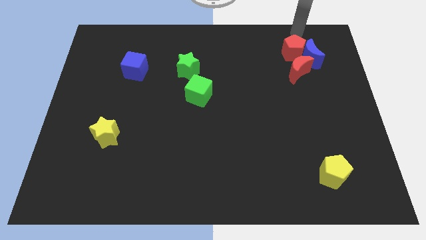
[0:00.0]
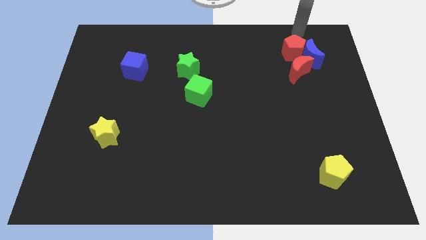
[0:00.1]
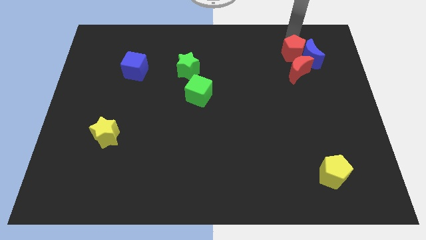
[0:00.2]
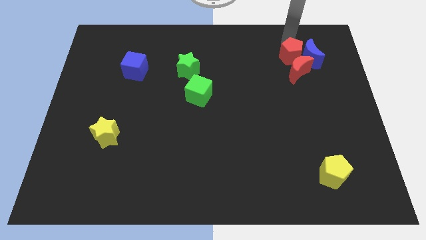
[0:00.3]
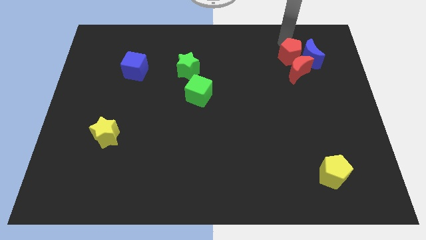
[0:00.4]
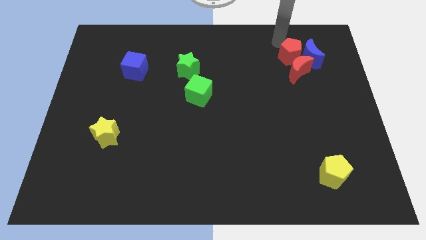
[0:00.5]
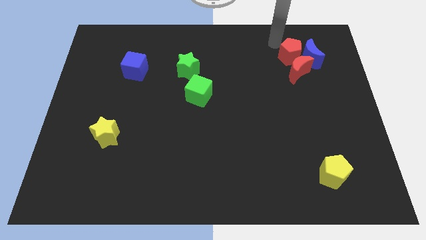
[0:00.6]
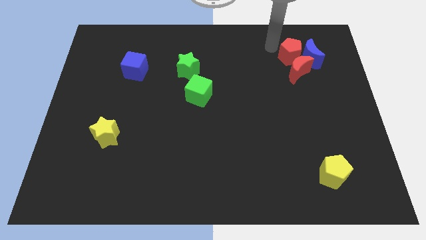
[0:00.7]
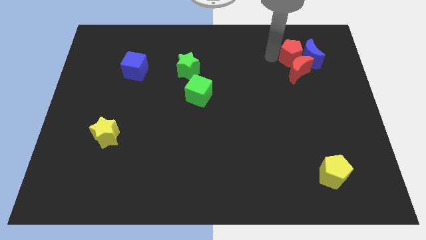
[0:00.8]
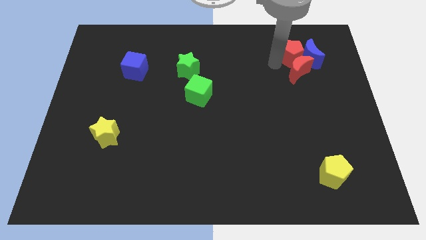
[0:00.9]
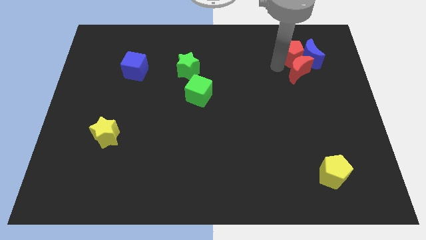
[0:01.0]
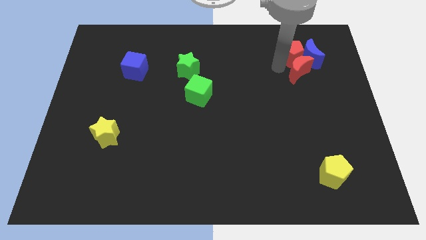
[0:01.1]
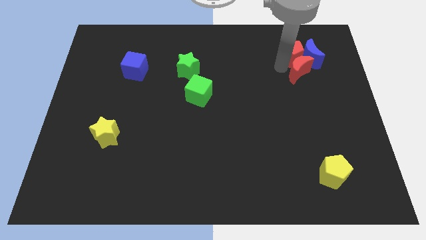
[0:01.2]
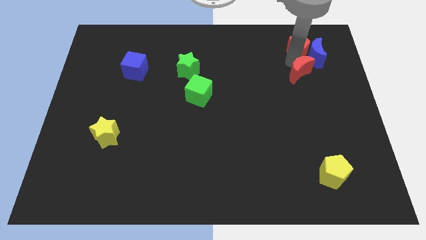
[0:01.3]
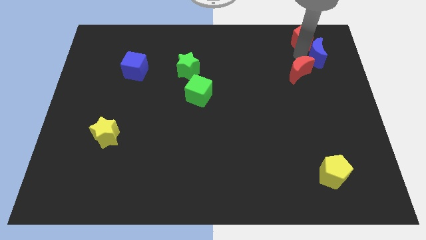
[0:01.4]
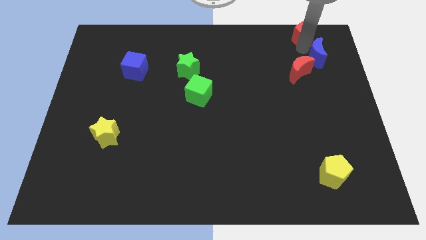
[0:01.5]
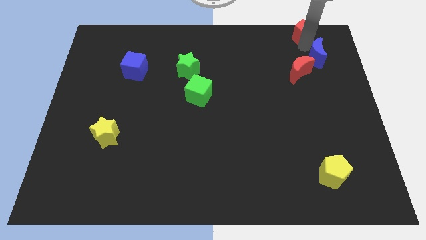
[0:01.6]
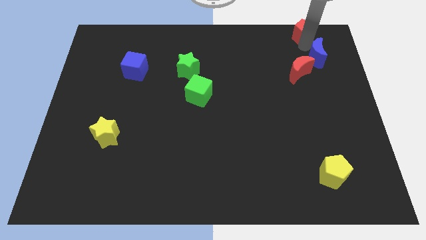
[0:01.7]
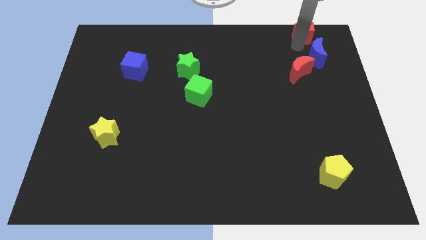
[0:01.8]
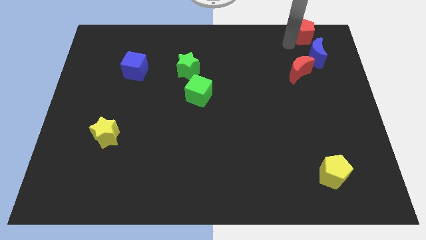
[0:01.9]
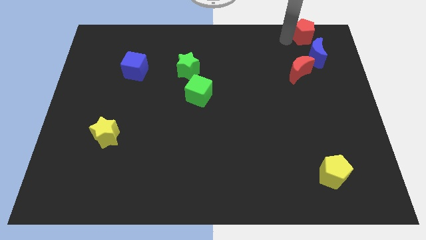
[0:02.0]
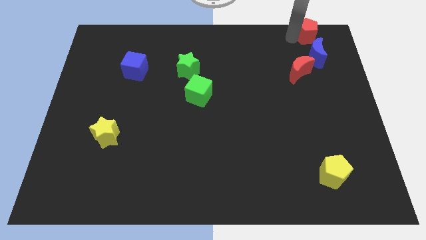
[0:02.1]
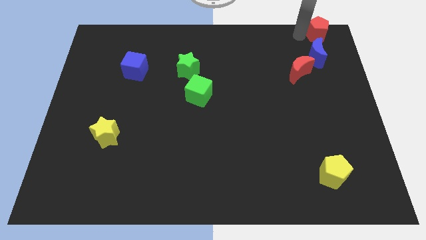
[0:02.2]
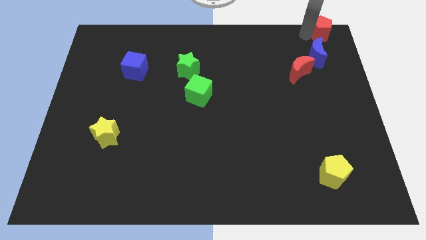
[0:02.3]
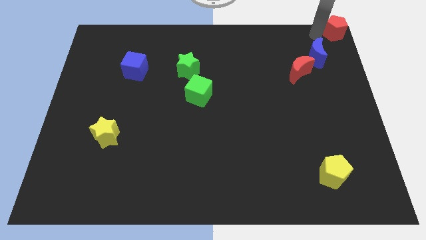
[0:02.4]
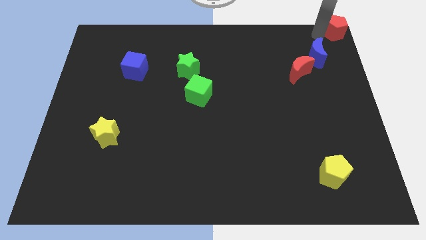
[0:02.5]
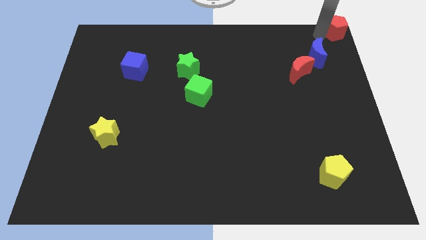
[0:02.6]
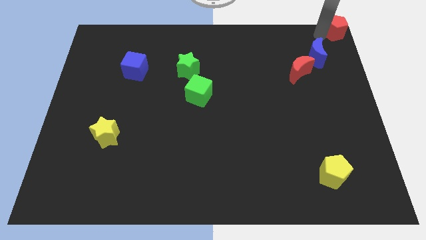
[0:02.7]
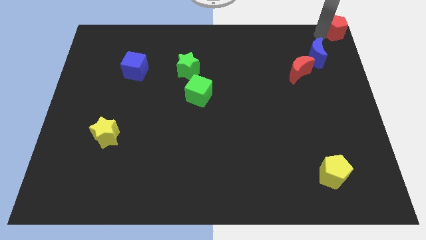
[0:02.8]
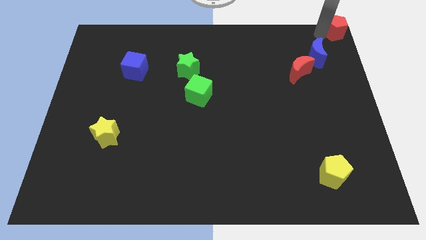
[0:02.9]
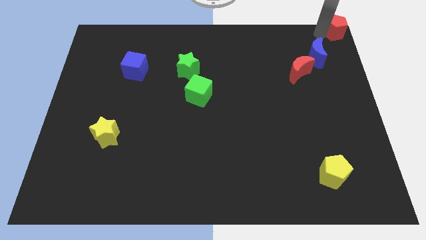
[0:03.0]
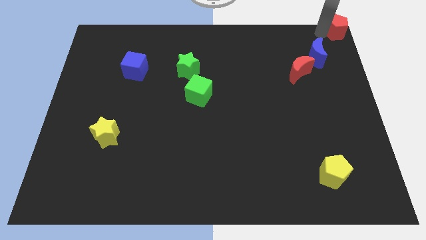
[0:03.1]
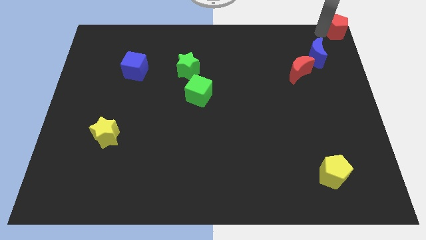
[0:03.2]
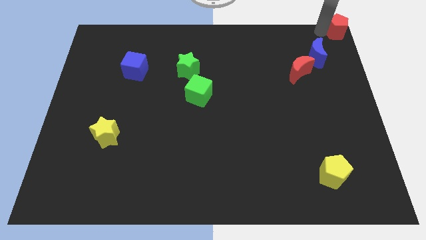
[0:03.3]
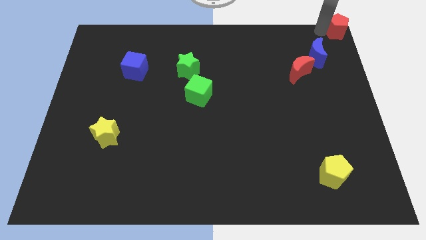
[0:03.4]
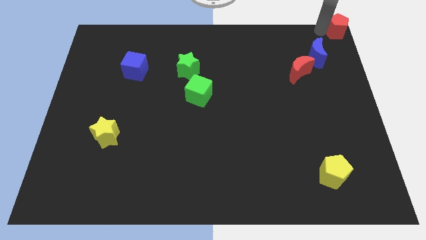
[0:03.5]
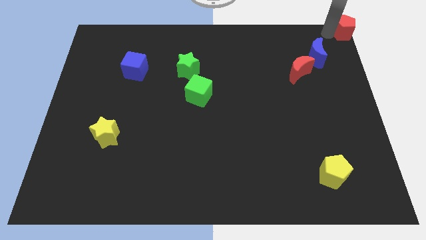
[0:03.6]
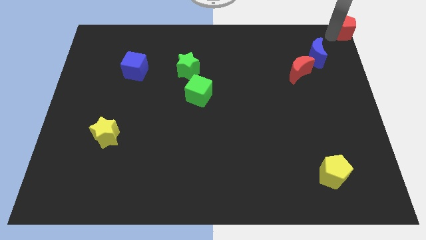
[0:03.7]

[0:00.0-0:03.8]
place the red pentagon to the top right corner

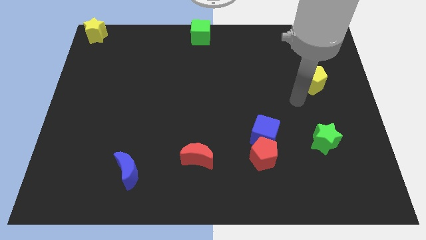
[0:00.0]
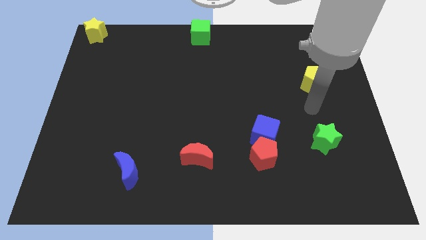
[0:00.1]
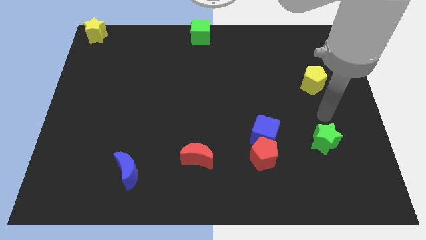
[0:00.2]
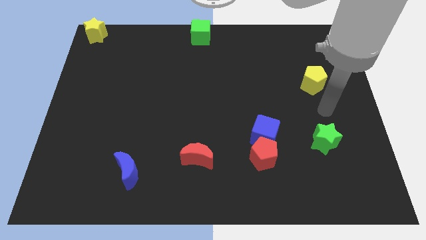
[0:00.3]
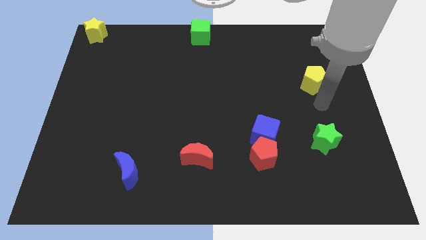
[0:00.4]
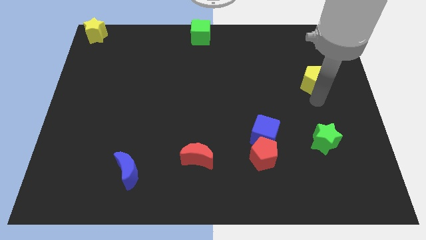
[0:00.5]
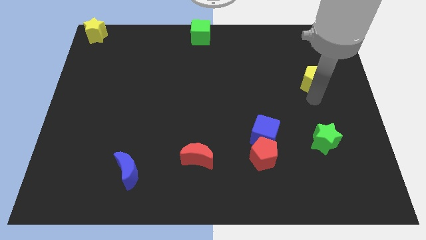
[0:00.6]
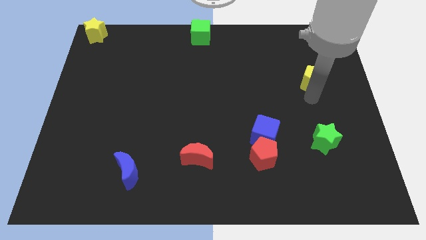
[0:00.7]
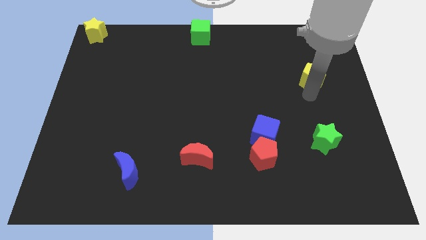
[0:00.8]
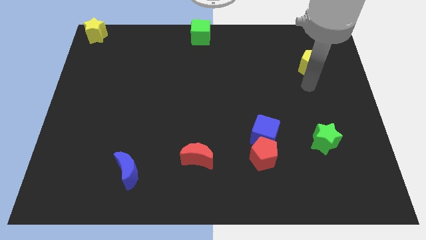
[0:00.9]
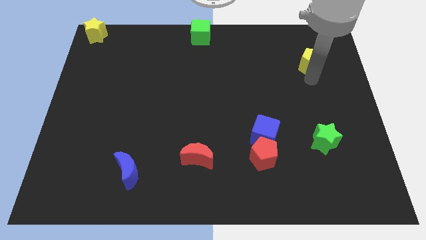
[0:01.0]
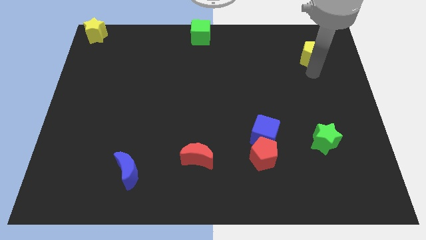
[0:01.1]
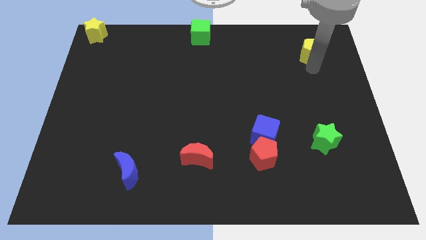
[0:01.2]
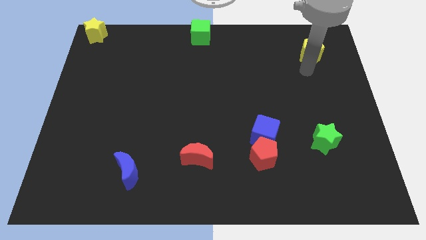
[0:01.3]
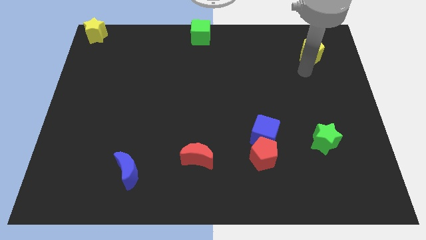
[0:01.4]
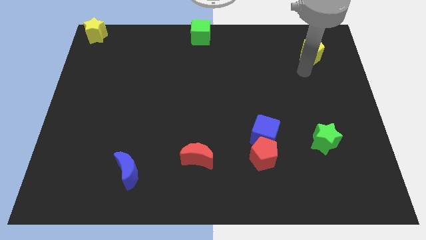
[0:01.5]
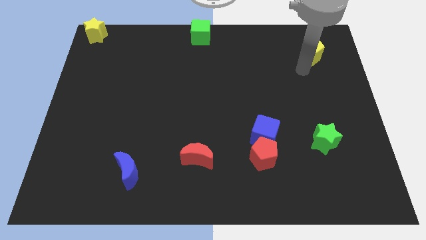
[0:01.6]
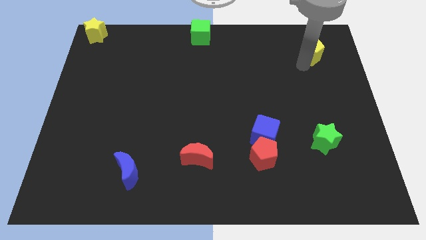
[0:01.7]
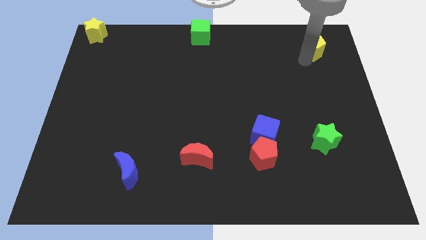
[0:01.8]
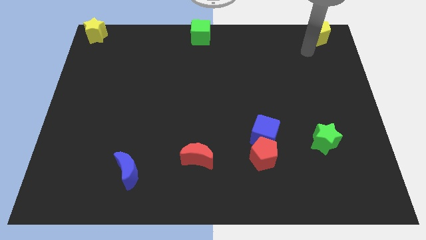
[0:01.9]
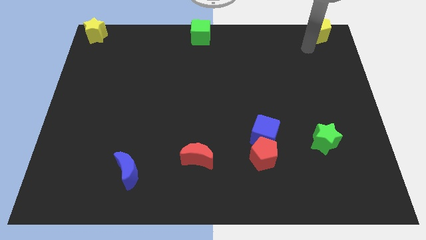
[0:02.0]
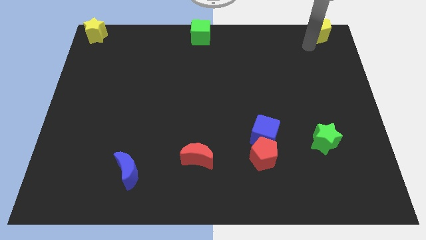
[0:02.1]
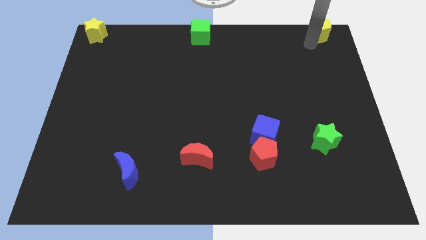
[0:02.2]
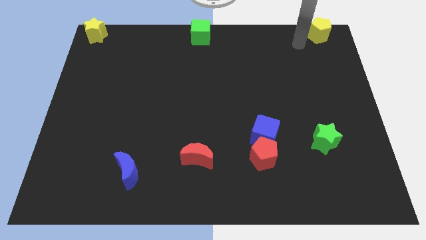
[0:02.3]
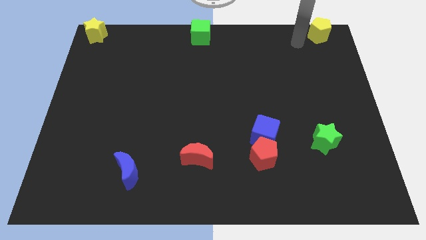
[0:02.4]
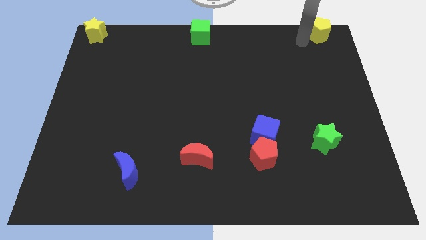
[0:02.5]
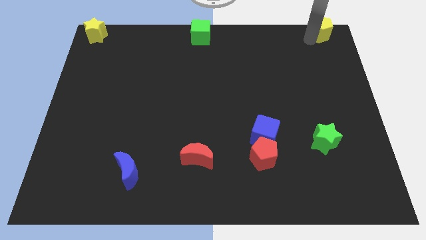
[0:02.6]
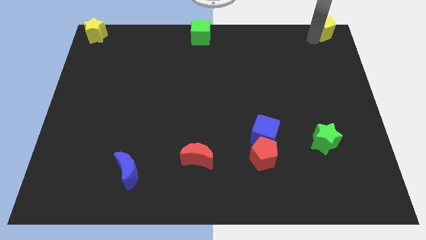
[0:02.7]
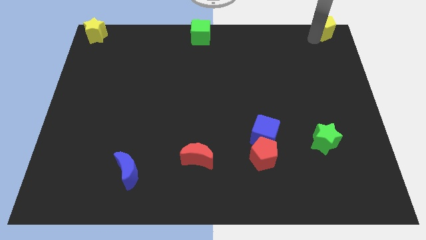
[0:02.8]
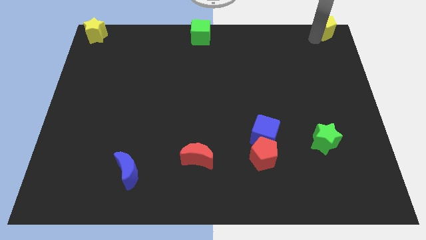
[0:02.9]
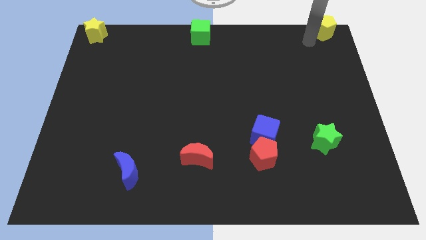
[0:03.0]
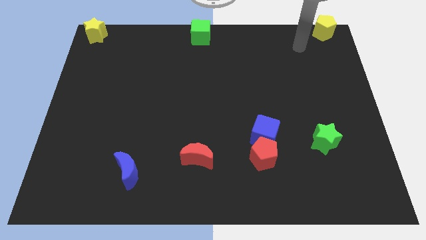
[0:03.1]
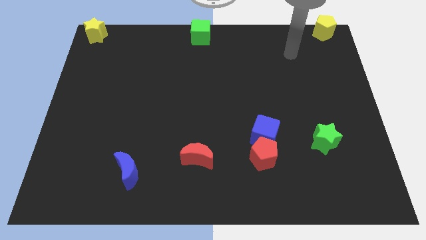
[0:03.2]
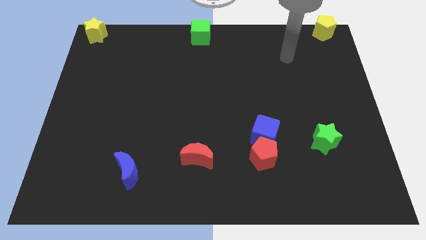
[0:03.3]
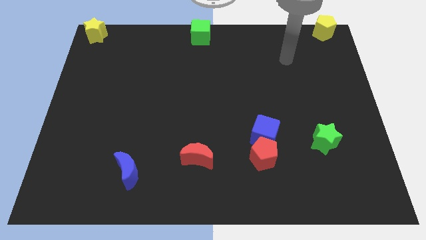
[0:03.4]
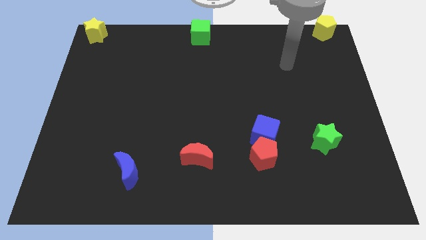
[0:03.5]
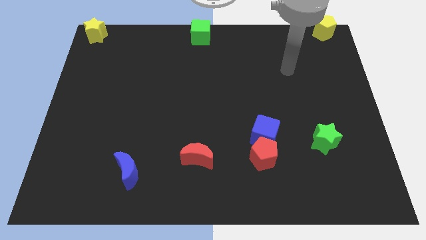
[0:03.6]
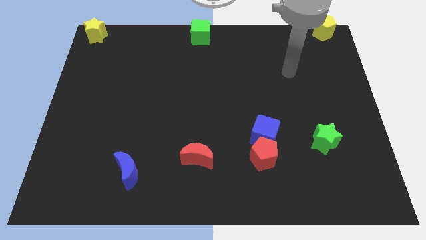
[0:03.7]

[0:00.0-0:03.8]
place the yellow pentagon towards the top right corner

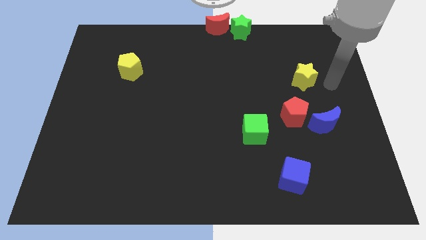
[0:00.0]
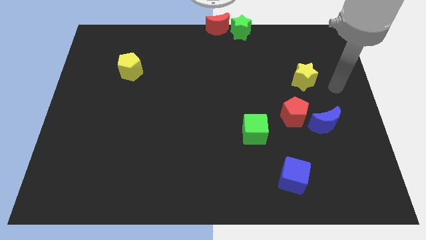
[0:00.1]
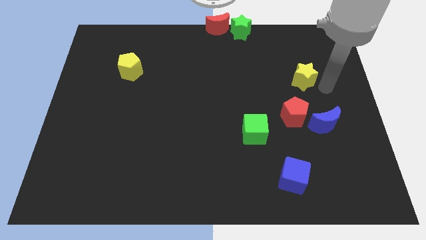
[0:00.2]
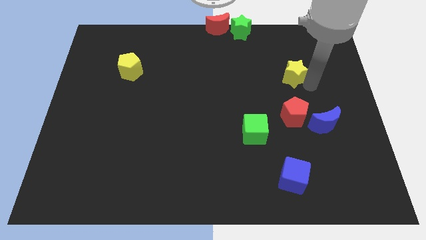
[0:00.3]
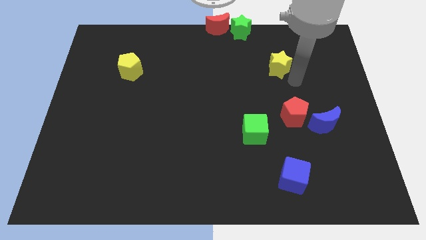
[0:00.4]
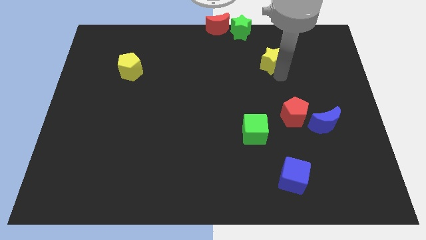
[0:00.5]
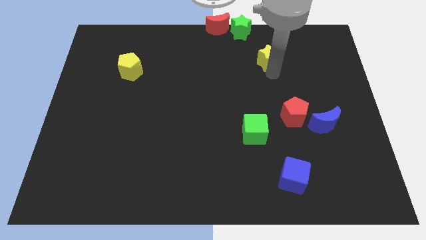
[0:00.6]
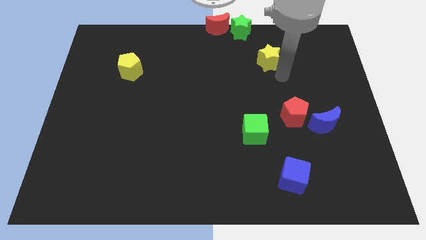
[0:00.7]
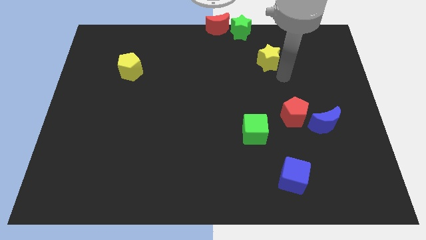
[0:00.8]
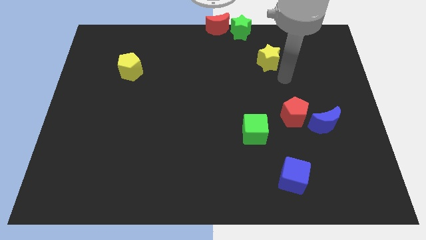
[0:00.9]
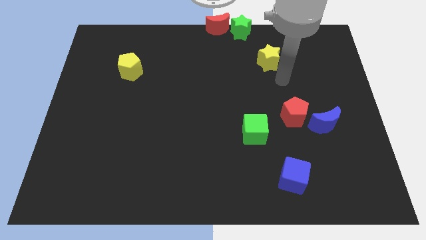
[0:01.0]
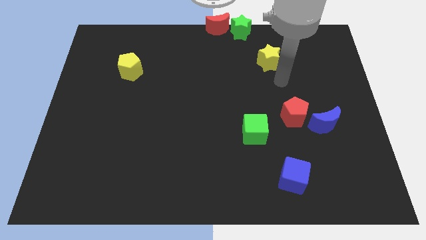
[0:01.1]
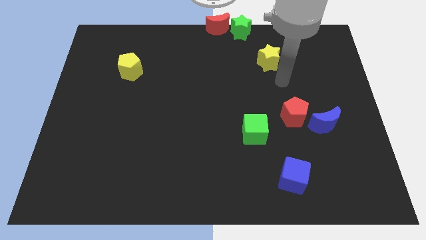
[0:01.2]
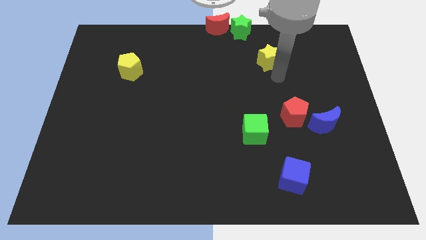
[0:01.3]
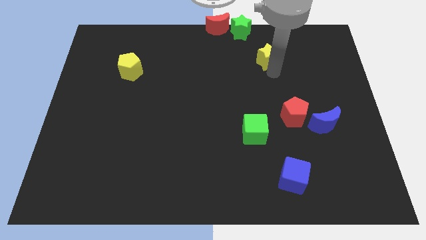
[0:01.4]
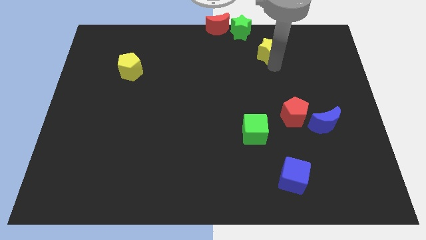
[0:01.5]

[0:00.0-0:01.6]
slightly move the yellow star towards the top center of board
